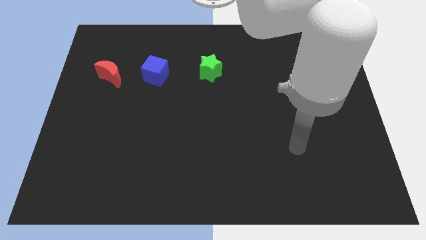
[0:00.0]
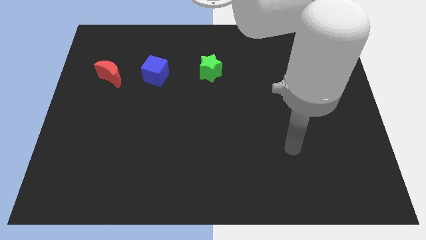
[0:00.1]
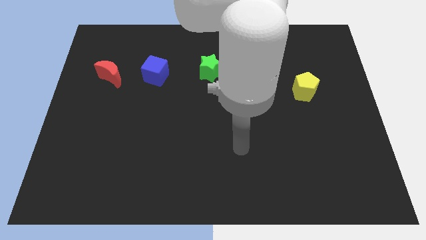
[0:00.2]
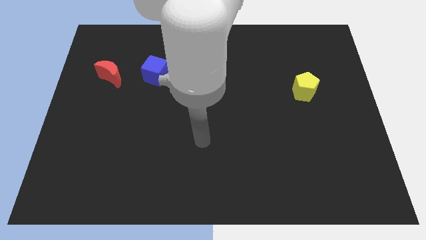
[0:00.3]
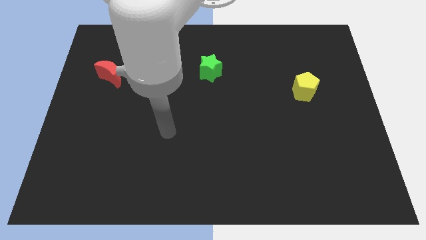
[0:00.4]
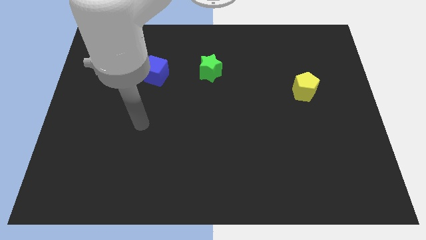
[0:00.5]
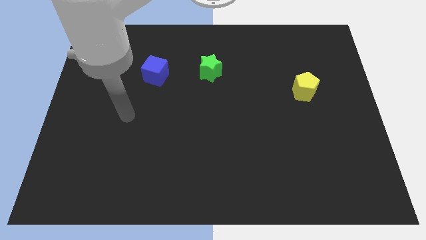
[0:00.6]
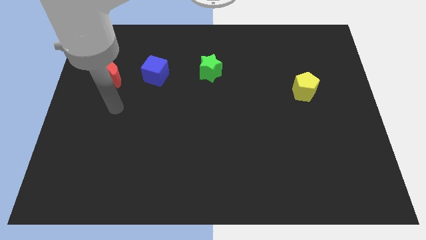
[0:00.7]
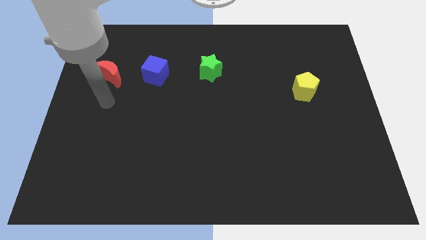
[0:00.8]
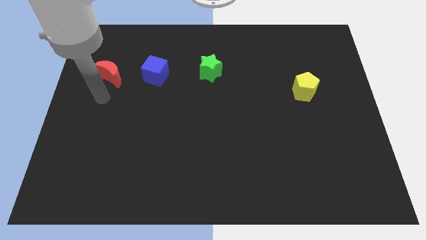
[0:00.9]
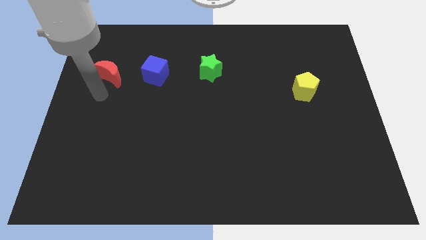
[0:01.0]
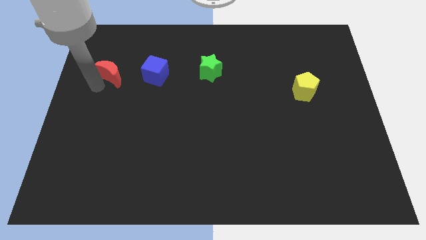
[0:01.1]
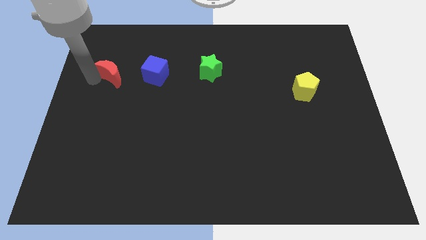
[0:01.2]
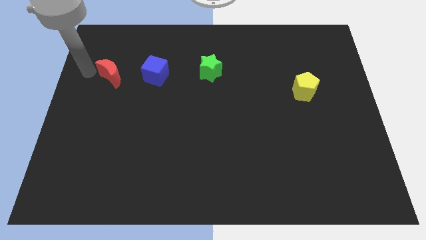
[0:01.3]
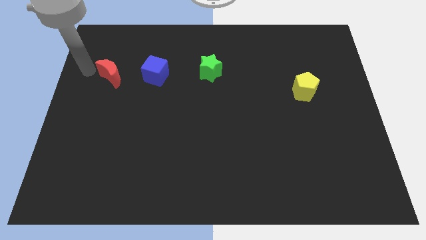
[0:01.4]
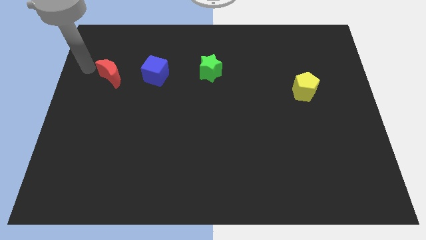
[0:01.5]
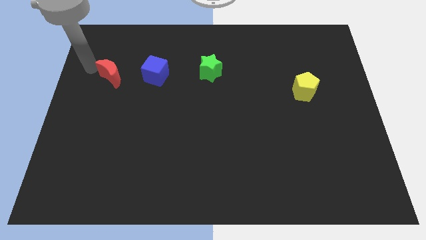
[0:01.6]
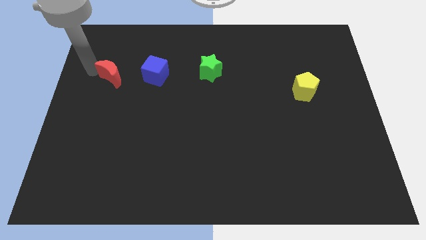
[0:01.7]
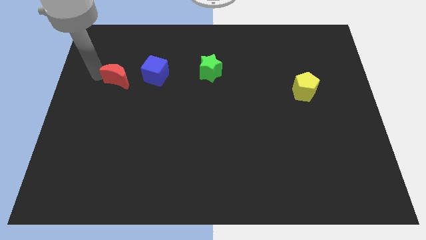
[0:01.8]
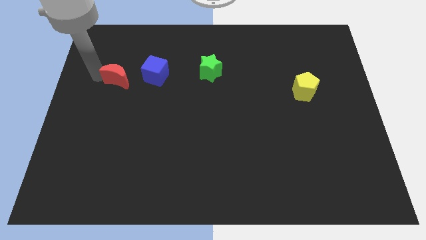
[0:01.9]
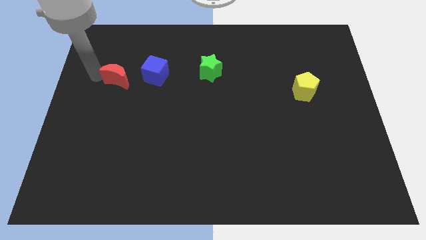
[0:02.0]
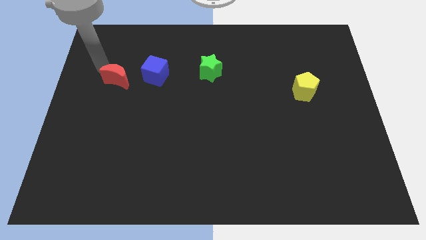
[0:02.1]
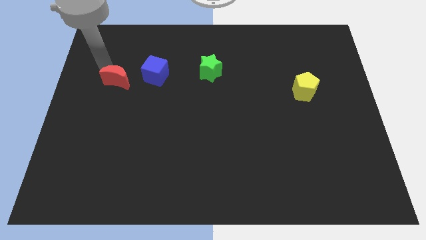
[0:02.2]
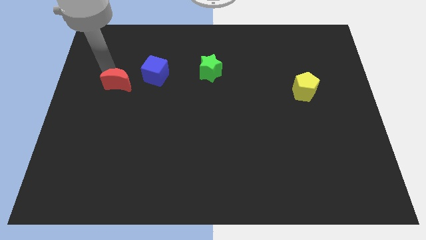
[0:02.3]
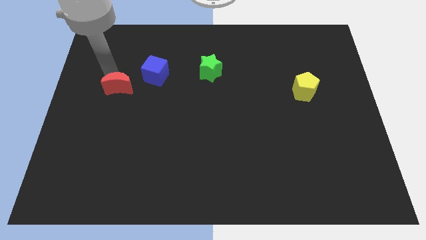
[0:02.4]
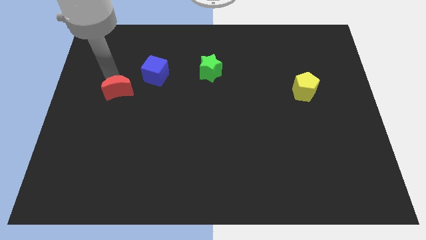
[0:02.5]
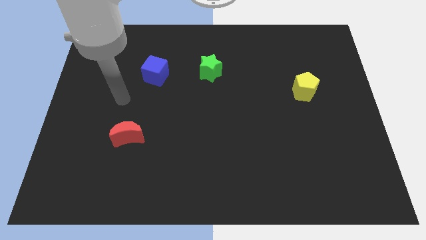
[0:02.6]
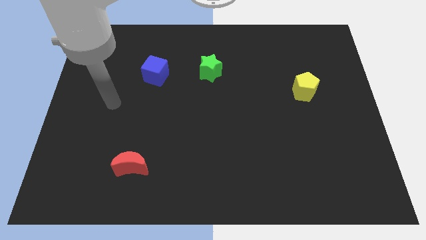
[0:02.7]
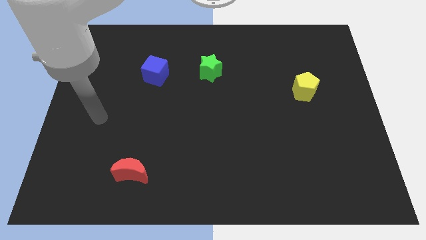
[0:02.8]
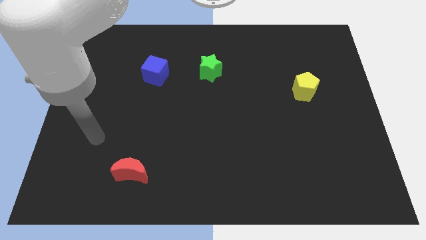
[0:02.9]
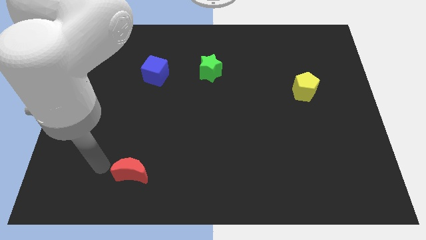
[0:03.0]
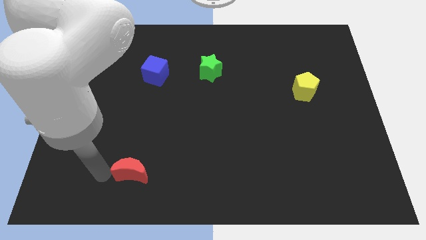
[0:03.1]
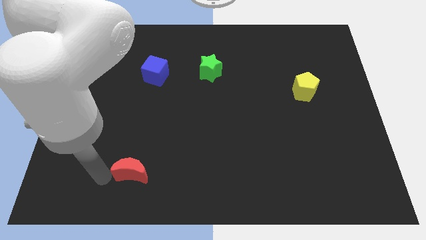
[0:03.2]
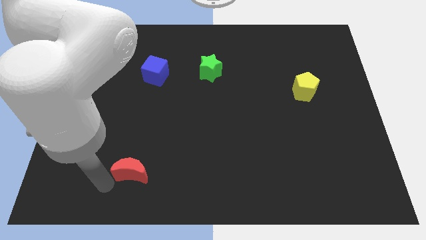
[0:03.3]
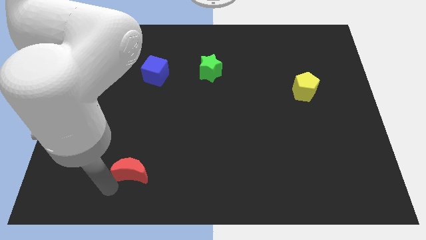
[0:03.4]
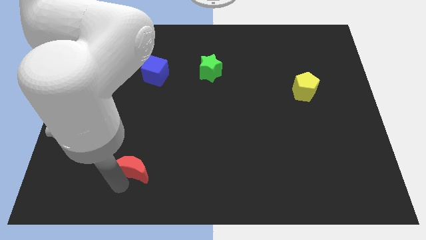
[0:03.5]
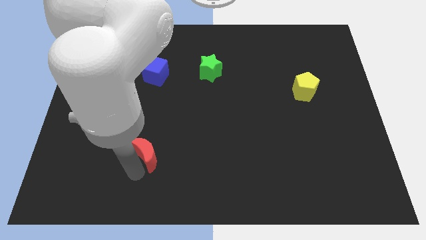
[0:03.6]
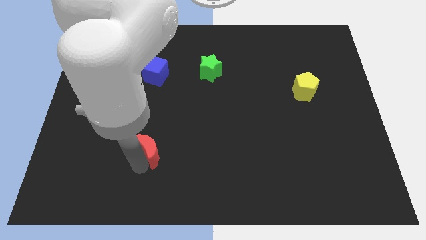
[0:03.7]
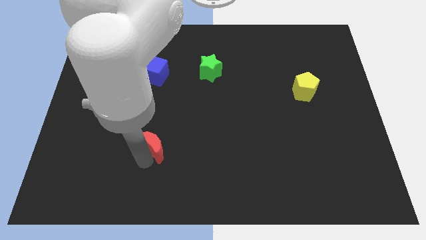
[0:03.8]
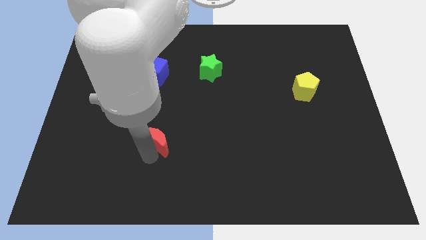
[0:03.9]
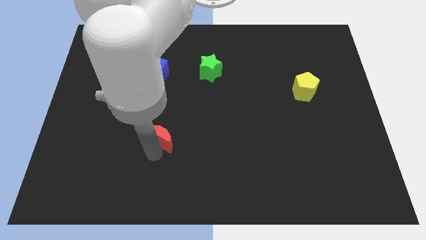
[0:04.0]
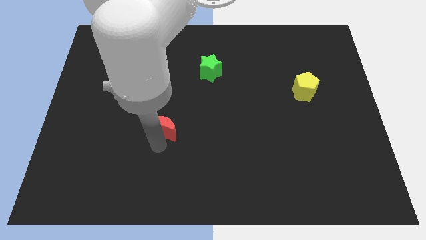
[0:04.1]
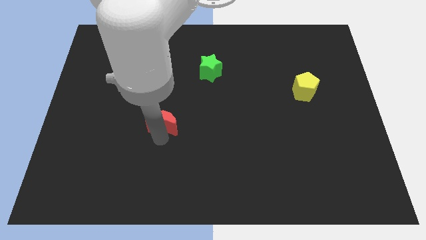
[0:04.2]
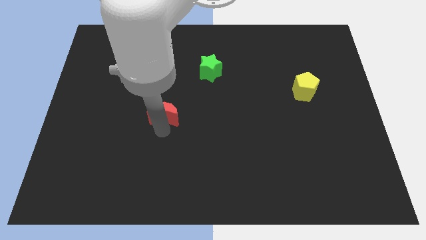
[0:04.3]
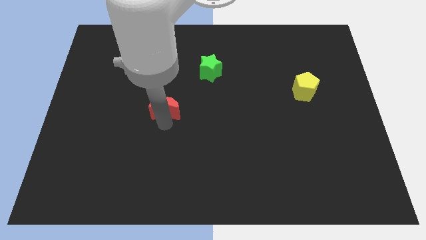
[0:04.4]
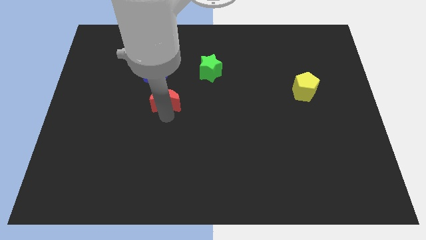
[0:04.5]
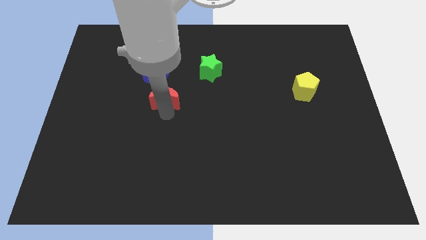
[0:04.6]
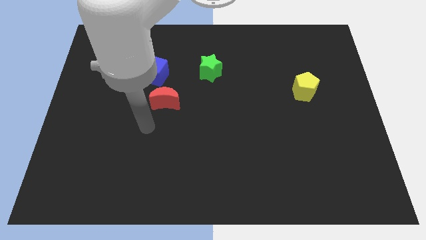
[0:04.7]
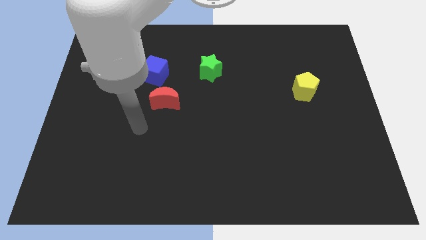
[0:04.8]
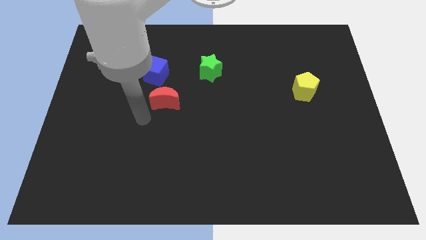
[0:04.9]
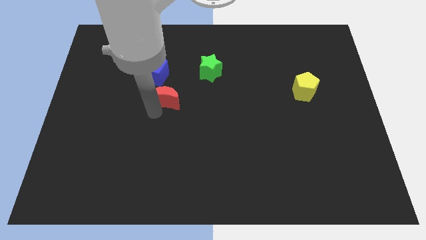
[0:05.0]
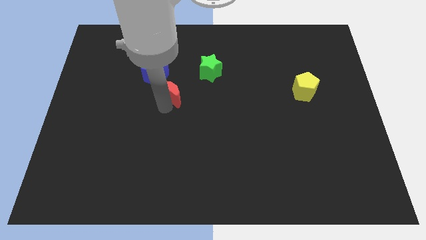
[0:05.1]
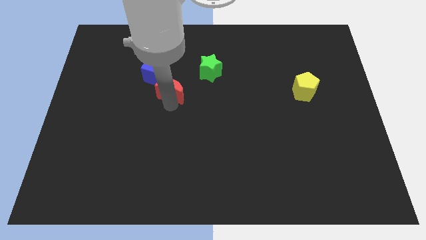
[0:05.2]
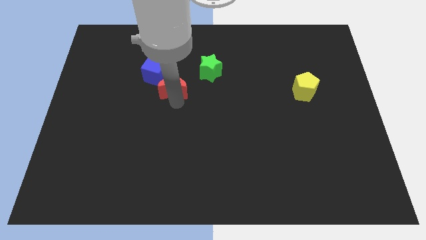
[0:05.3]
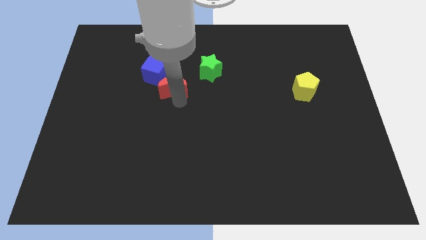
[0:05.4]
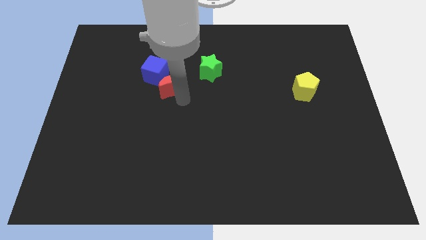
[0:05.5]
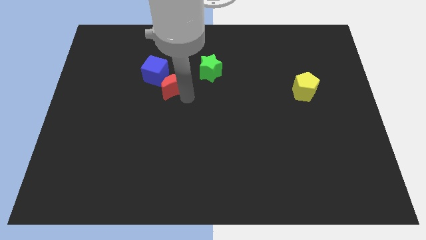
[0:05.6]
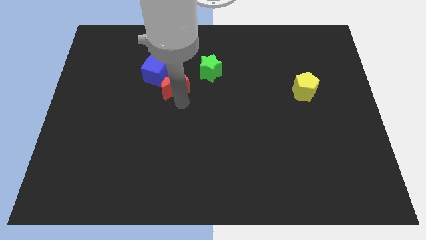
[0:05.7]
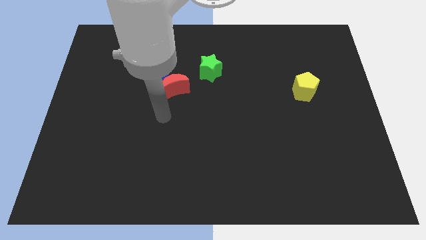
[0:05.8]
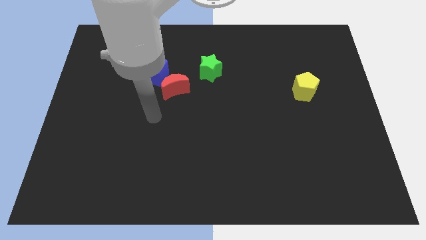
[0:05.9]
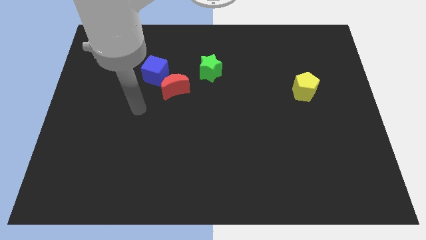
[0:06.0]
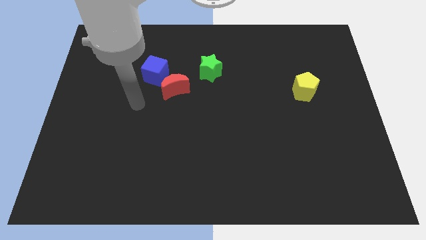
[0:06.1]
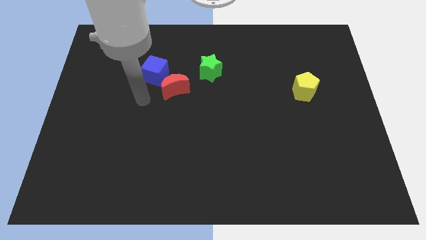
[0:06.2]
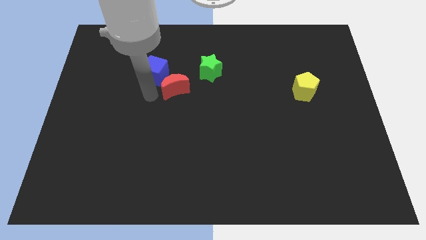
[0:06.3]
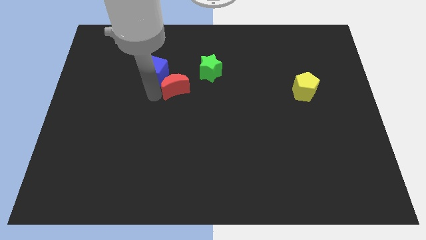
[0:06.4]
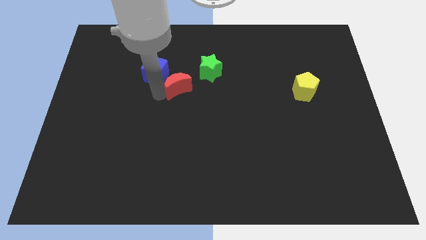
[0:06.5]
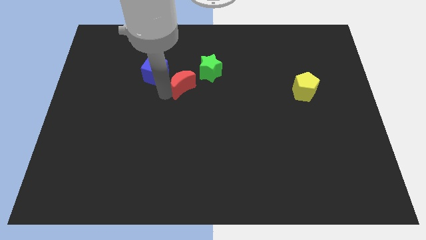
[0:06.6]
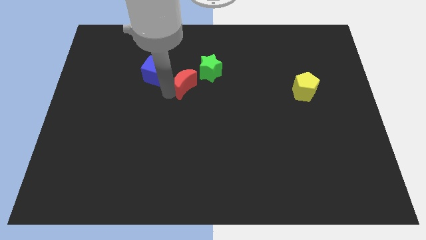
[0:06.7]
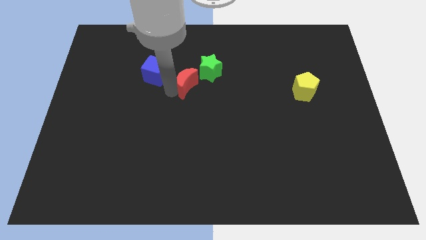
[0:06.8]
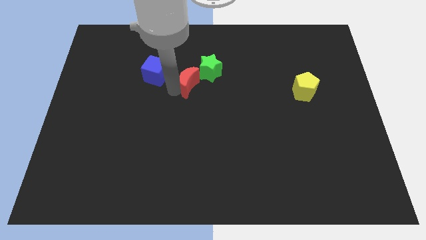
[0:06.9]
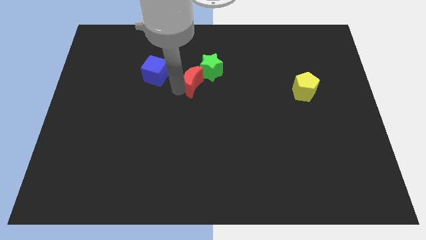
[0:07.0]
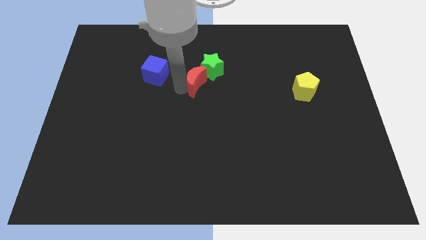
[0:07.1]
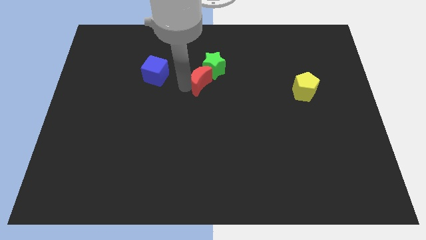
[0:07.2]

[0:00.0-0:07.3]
move the moon close to the green block

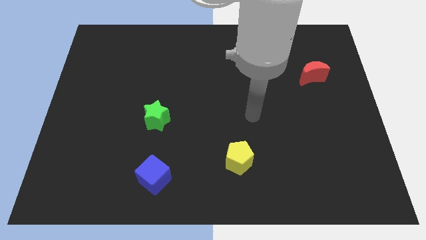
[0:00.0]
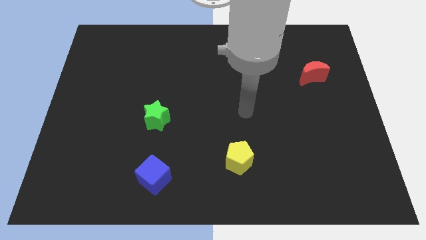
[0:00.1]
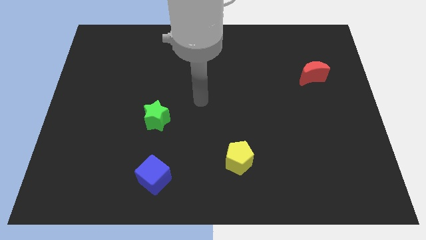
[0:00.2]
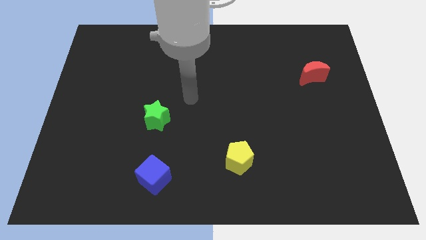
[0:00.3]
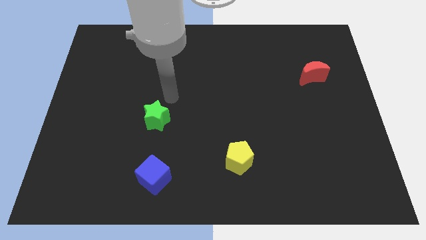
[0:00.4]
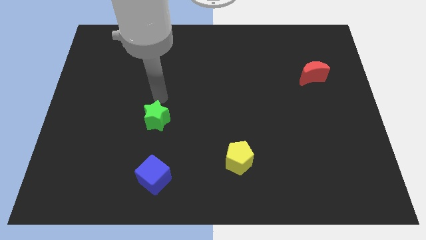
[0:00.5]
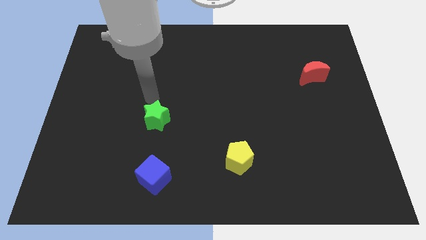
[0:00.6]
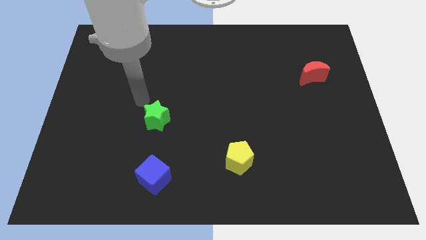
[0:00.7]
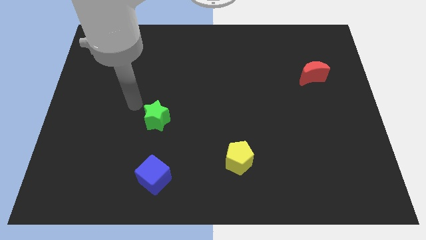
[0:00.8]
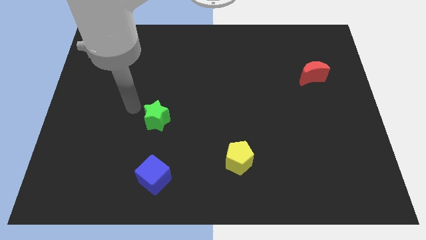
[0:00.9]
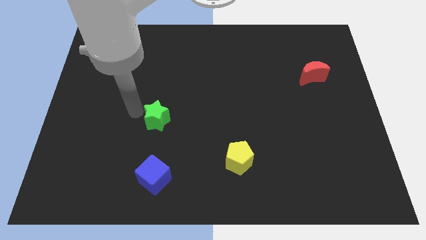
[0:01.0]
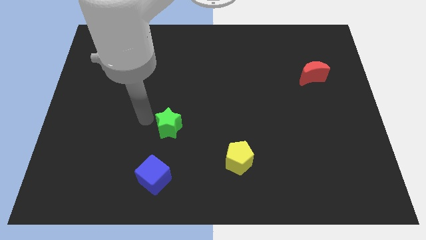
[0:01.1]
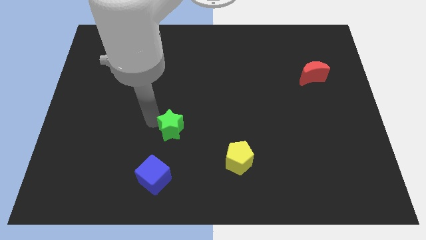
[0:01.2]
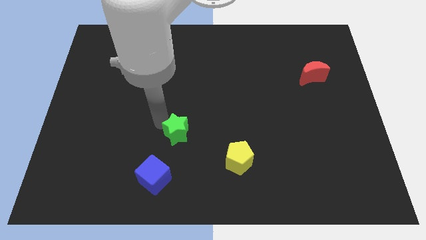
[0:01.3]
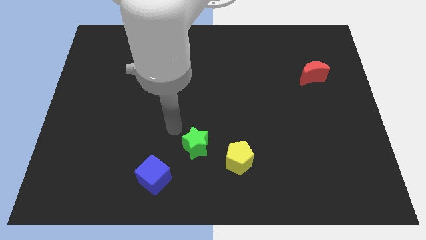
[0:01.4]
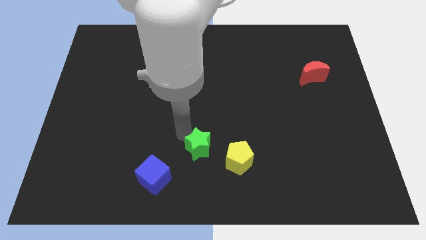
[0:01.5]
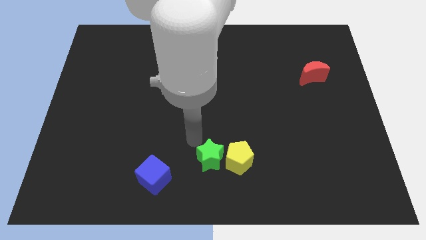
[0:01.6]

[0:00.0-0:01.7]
push the green block to the pentagon
